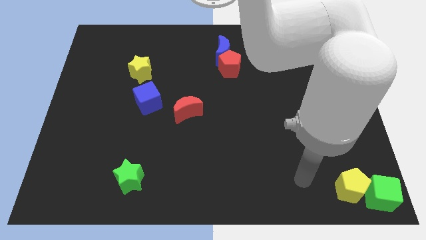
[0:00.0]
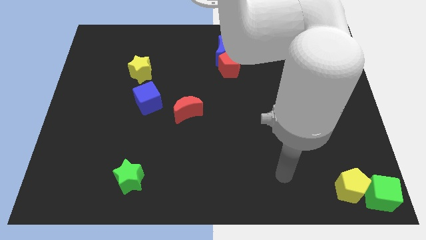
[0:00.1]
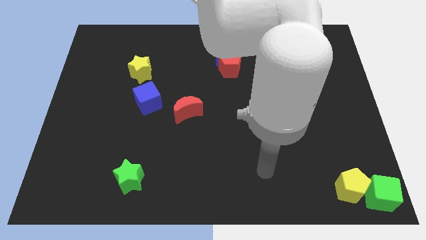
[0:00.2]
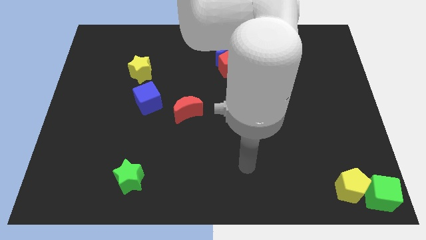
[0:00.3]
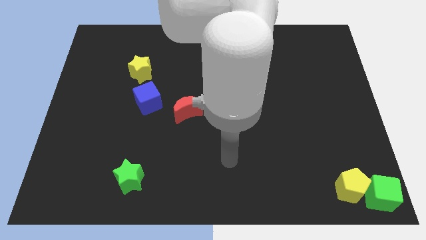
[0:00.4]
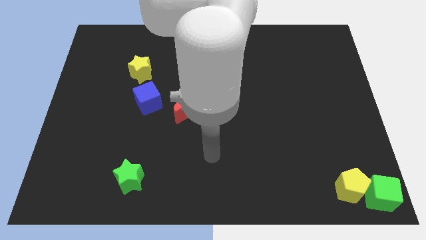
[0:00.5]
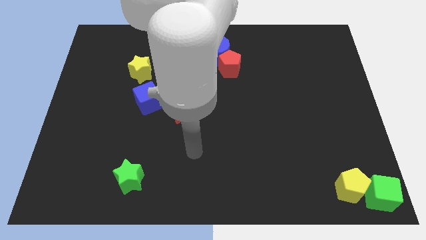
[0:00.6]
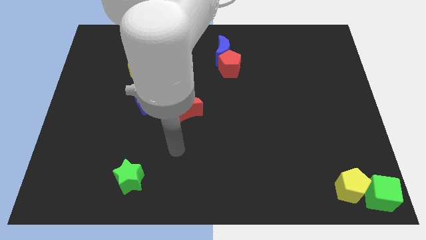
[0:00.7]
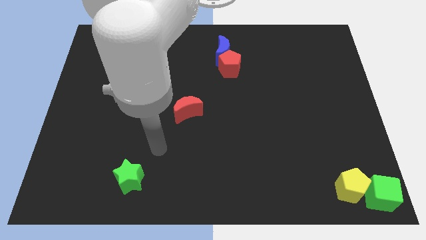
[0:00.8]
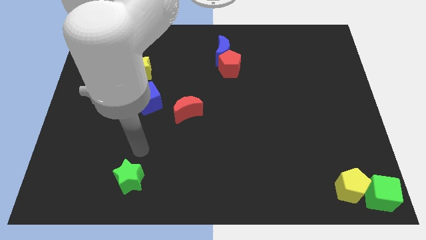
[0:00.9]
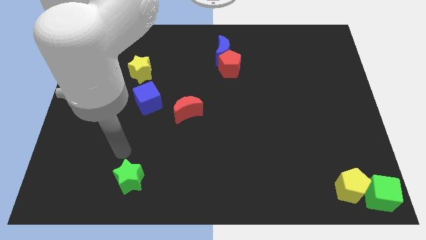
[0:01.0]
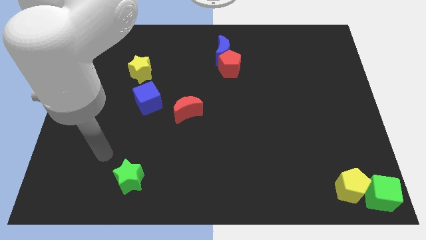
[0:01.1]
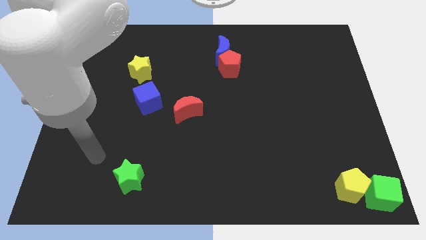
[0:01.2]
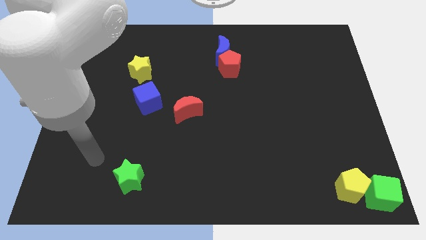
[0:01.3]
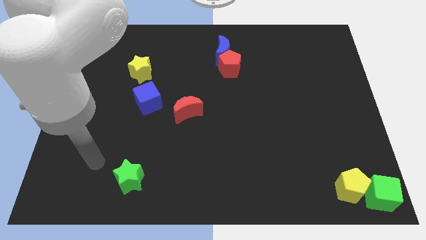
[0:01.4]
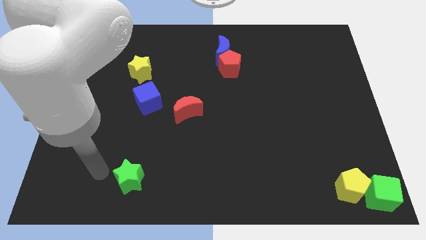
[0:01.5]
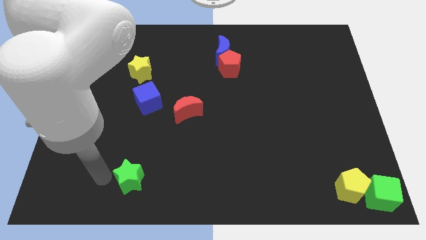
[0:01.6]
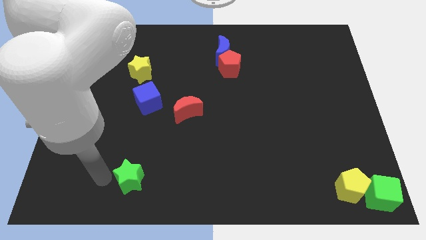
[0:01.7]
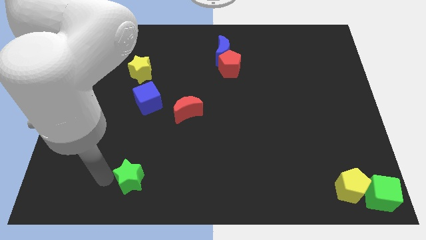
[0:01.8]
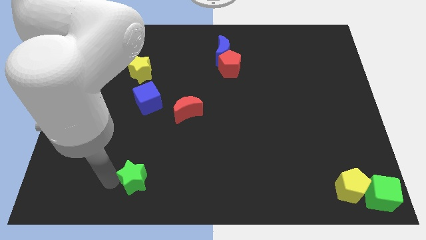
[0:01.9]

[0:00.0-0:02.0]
touch the green star

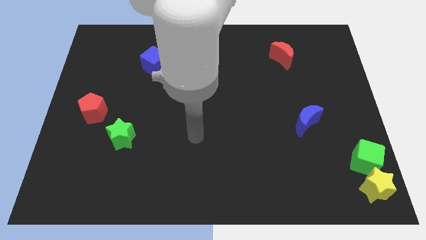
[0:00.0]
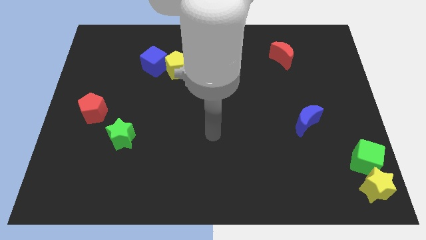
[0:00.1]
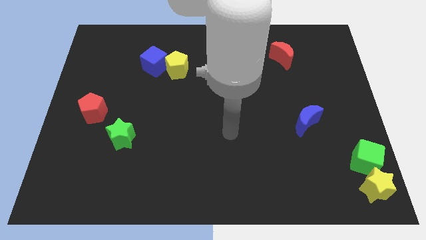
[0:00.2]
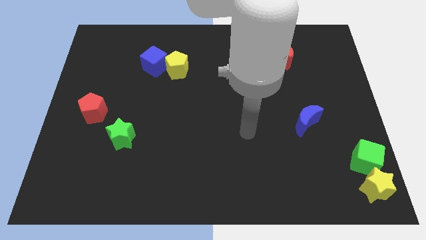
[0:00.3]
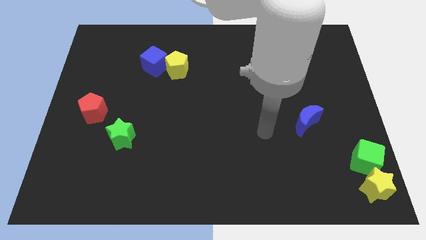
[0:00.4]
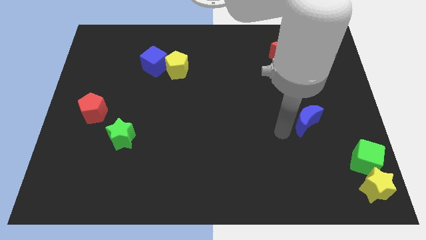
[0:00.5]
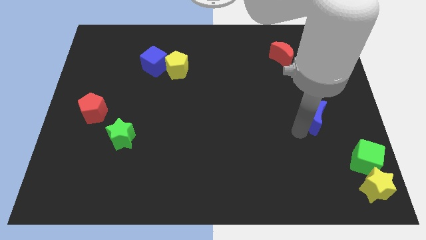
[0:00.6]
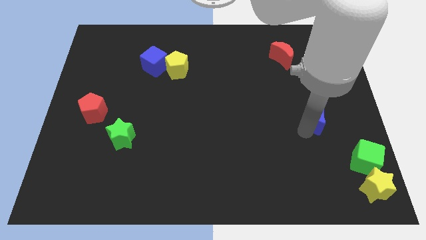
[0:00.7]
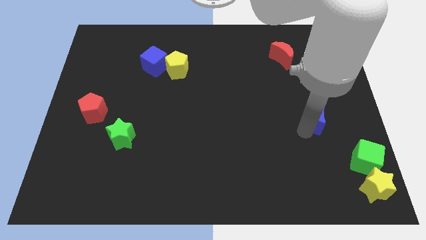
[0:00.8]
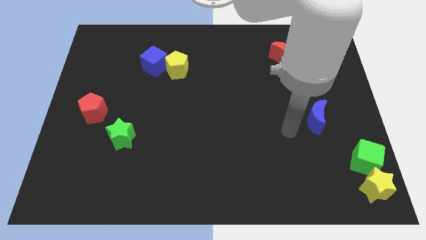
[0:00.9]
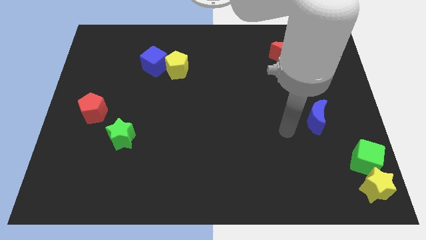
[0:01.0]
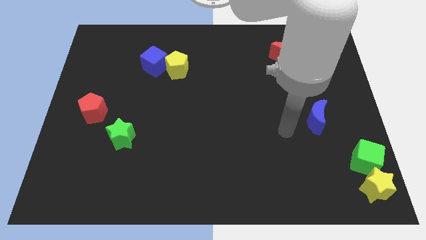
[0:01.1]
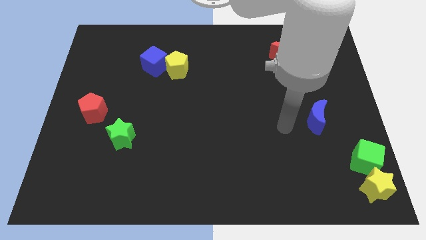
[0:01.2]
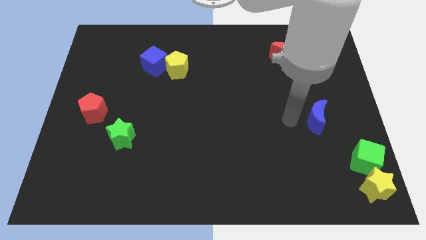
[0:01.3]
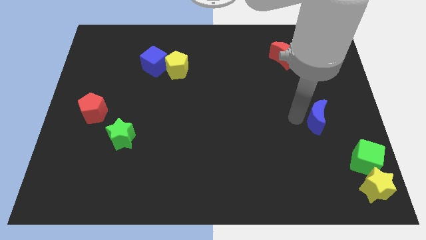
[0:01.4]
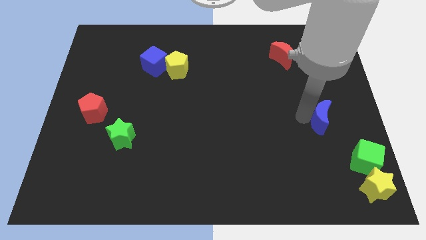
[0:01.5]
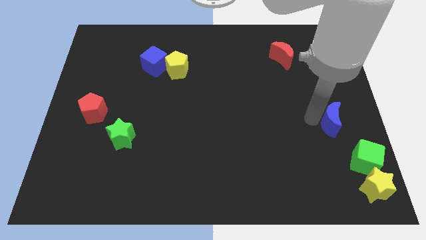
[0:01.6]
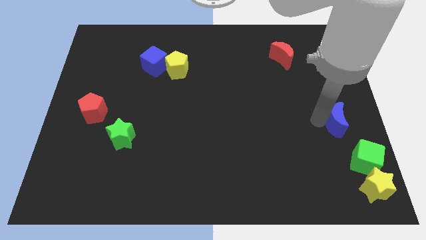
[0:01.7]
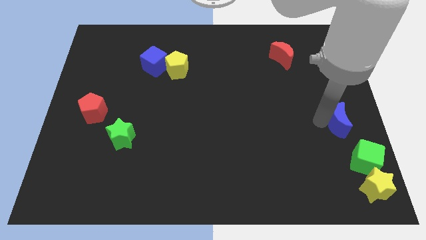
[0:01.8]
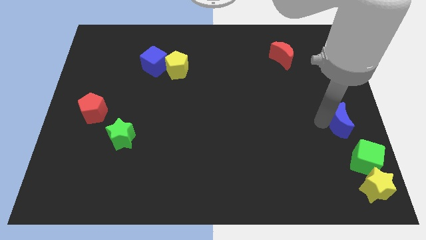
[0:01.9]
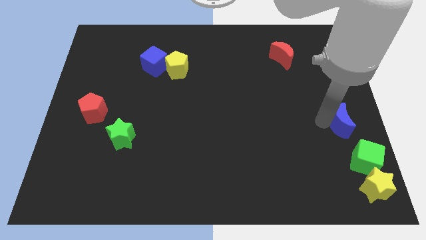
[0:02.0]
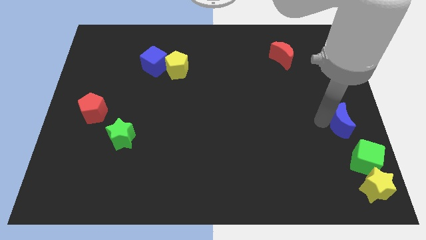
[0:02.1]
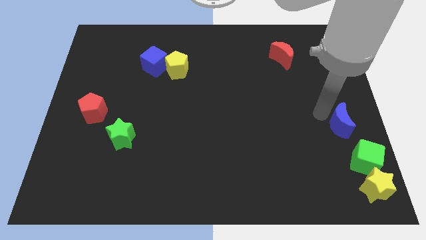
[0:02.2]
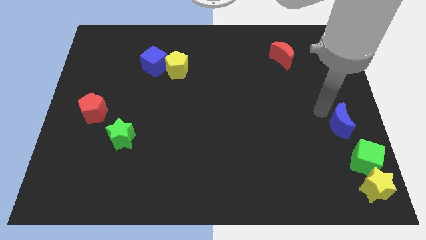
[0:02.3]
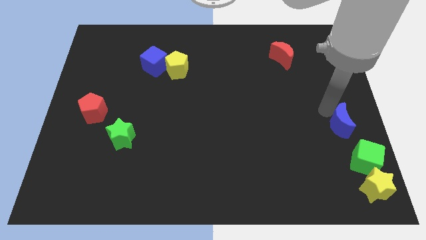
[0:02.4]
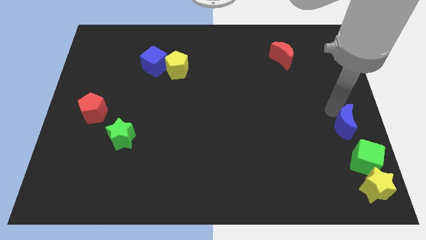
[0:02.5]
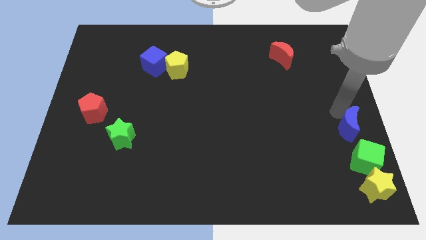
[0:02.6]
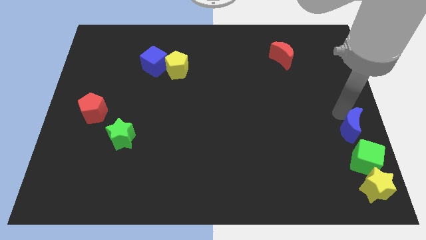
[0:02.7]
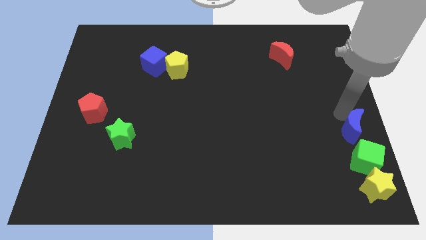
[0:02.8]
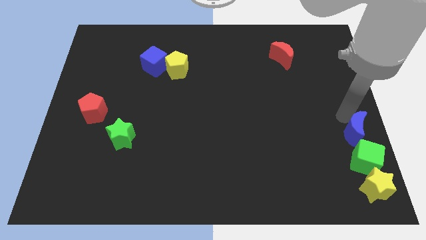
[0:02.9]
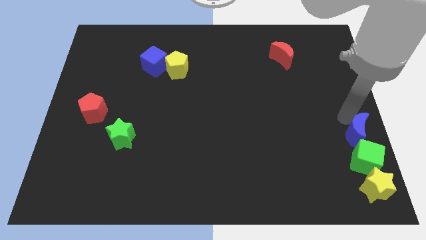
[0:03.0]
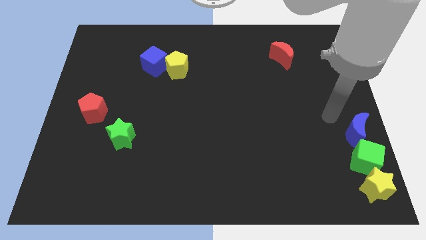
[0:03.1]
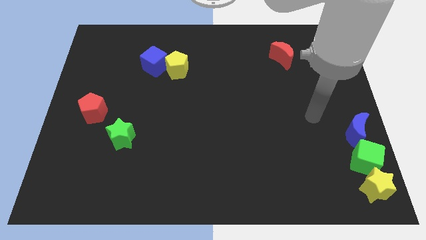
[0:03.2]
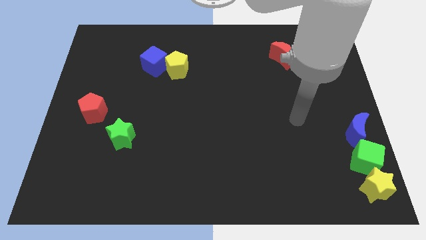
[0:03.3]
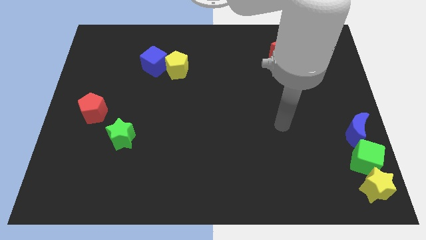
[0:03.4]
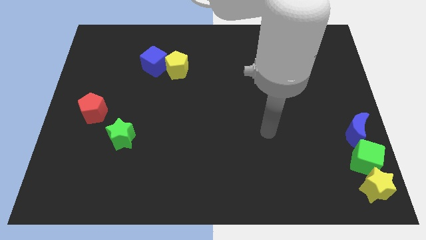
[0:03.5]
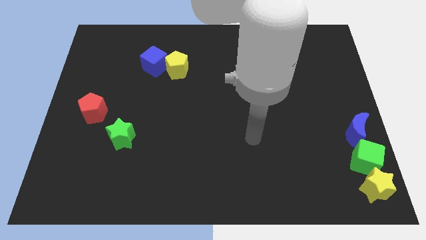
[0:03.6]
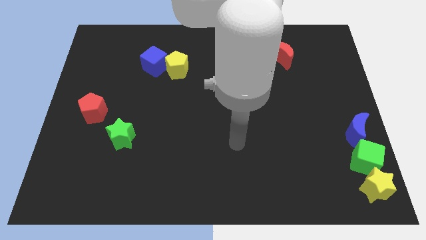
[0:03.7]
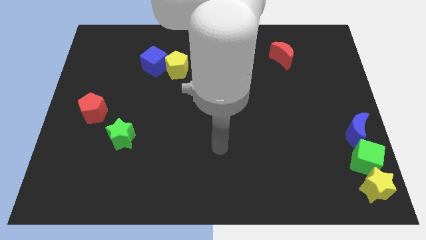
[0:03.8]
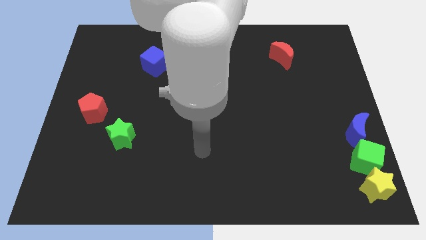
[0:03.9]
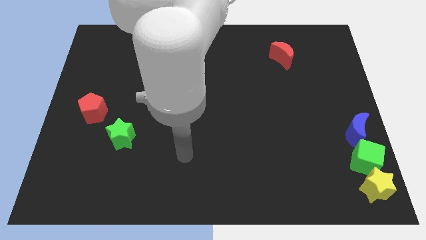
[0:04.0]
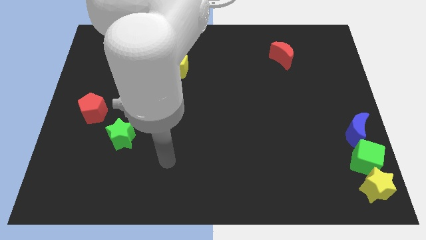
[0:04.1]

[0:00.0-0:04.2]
place blue crescent to the top of green block

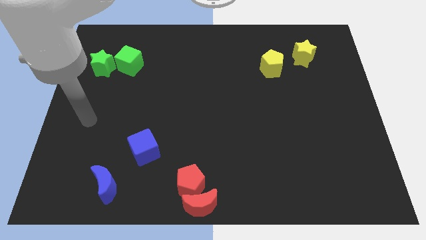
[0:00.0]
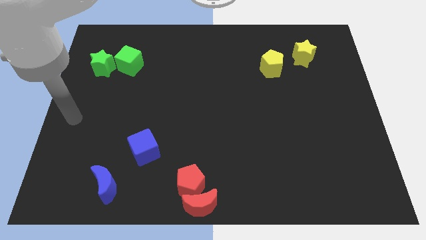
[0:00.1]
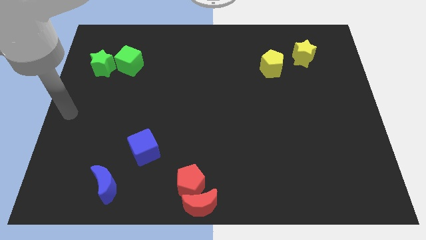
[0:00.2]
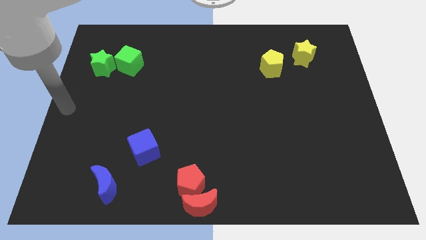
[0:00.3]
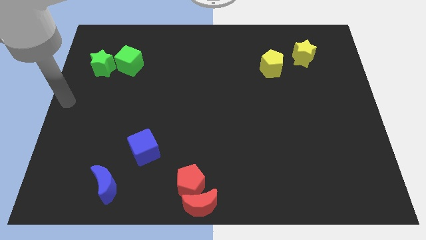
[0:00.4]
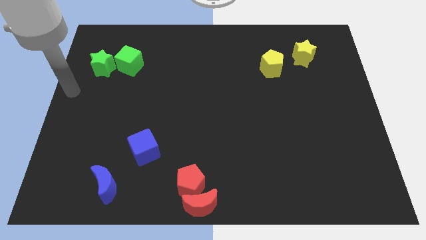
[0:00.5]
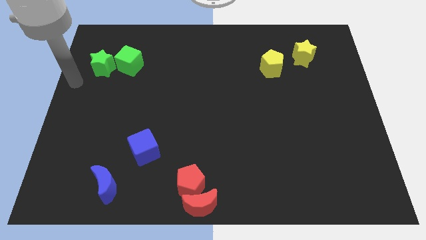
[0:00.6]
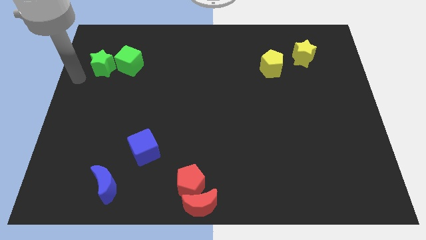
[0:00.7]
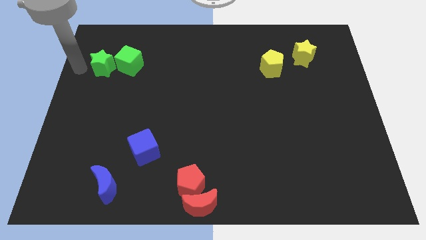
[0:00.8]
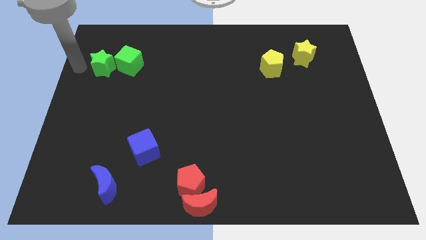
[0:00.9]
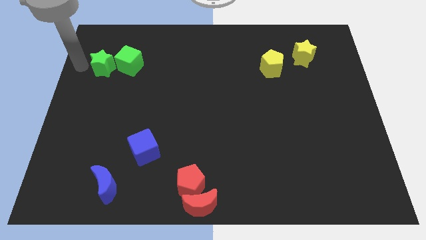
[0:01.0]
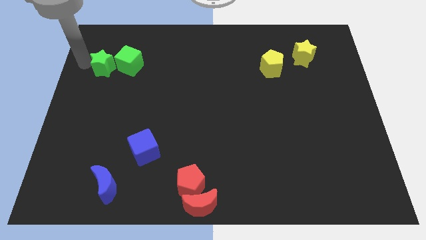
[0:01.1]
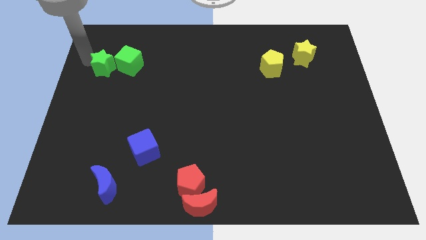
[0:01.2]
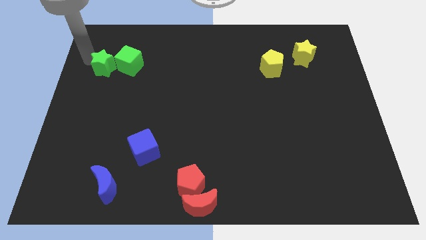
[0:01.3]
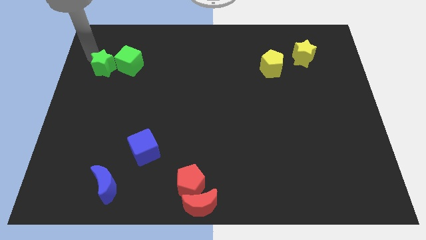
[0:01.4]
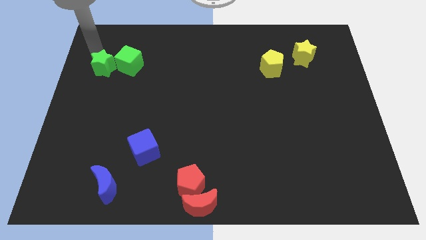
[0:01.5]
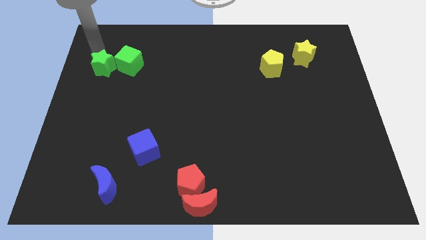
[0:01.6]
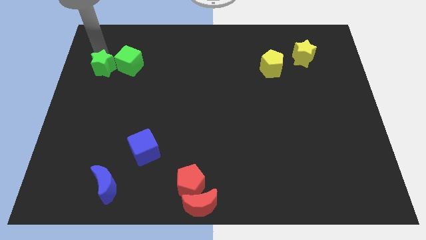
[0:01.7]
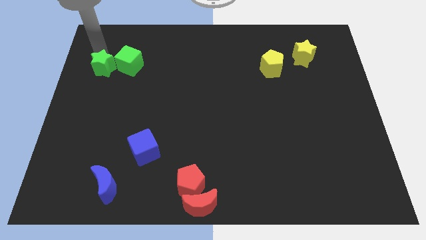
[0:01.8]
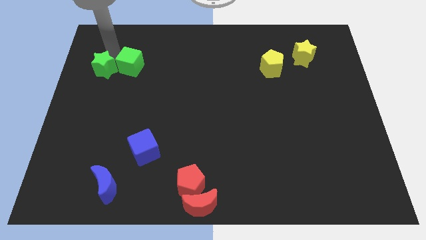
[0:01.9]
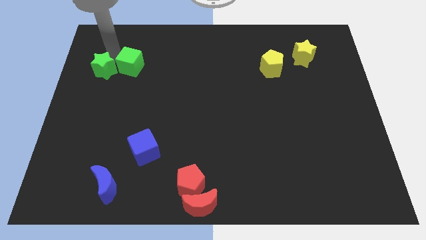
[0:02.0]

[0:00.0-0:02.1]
place the arm at the top of the green star

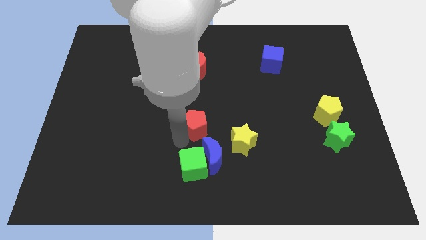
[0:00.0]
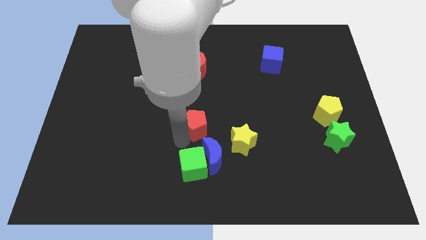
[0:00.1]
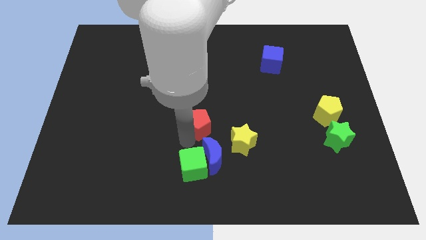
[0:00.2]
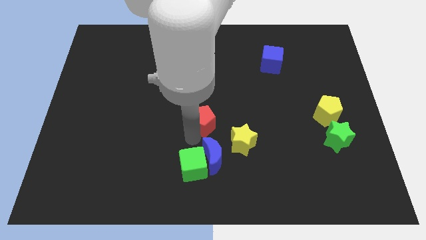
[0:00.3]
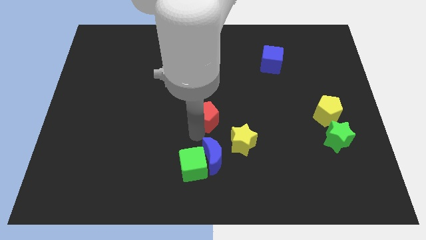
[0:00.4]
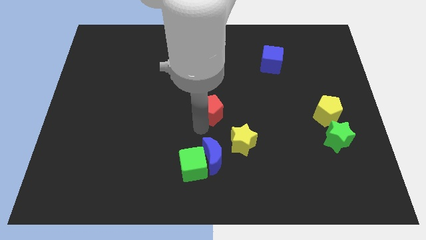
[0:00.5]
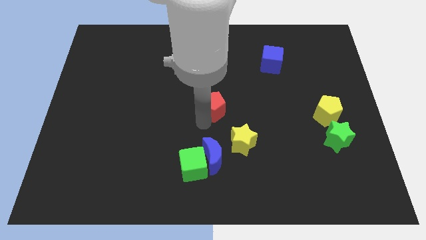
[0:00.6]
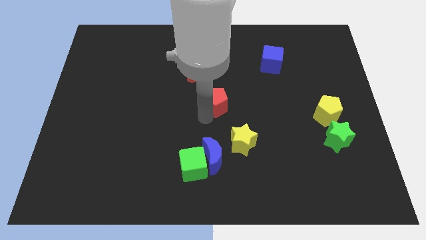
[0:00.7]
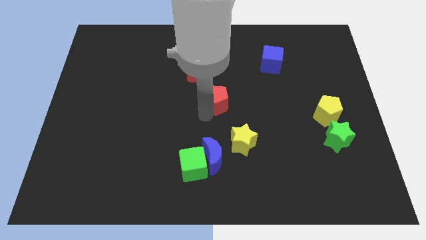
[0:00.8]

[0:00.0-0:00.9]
push the red pentagon closer to the red moon
